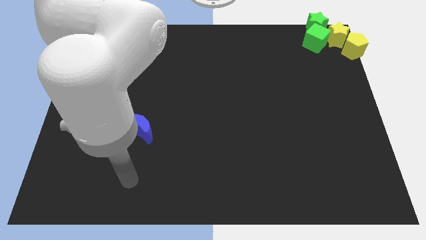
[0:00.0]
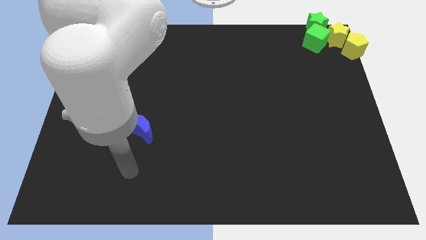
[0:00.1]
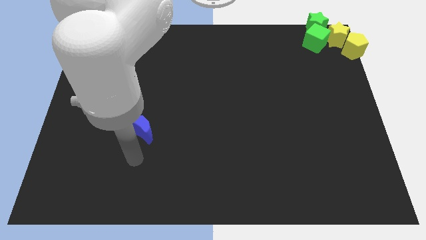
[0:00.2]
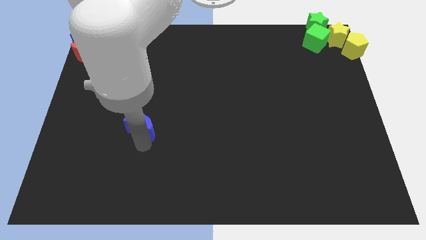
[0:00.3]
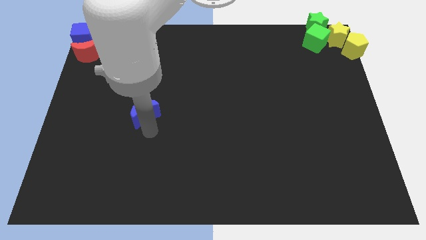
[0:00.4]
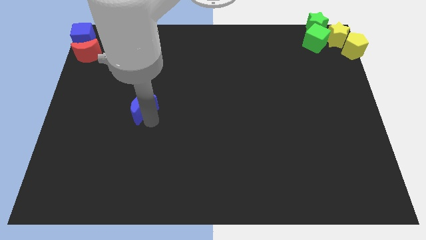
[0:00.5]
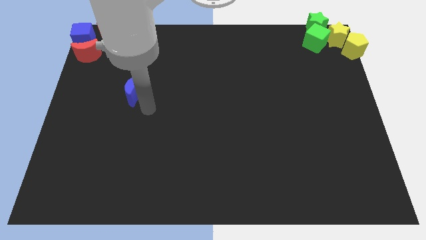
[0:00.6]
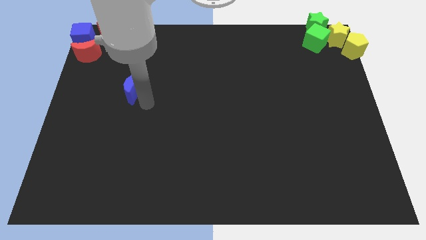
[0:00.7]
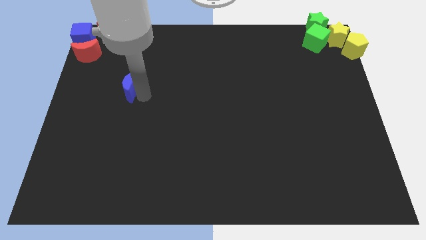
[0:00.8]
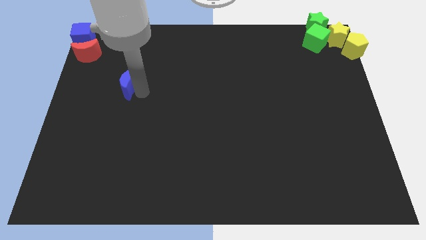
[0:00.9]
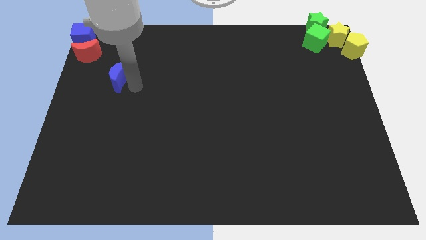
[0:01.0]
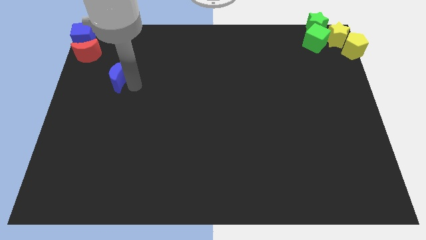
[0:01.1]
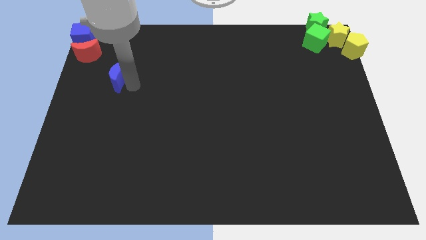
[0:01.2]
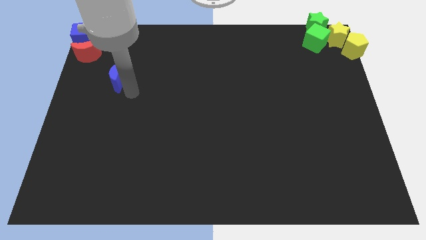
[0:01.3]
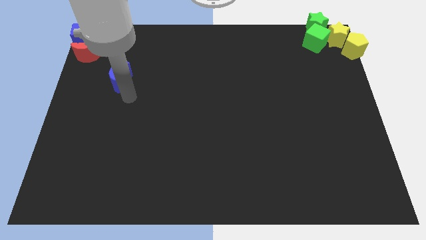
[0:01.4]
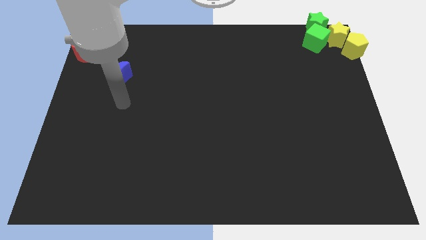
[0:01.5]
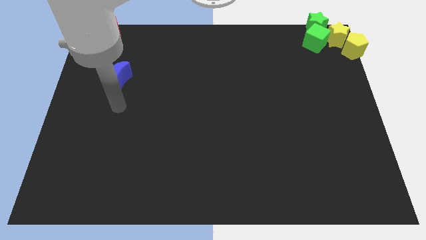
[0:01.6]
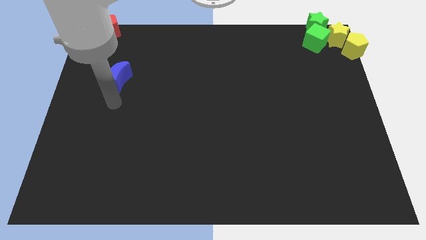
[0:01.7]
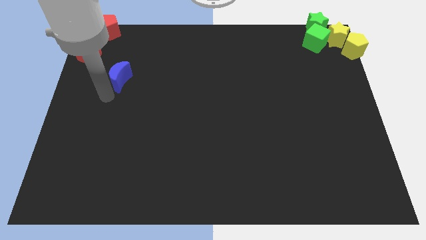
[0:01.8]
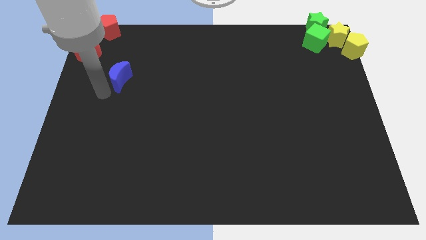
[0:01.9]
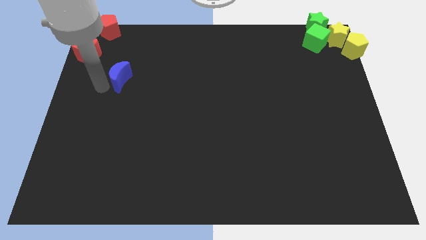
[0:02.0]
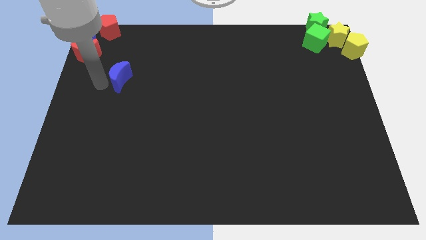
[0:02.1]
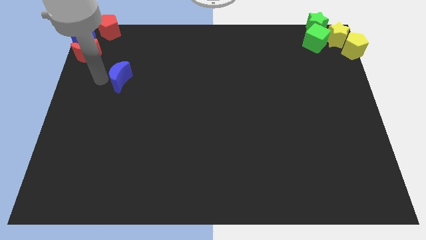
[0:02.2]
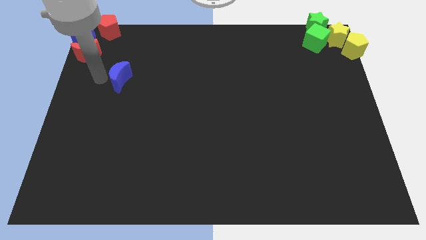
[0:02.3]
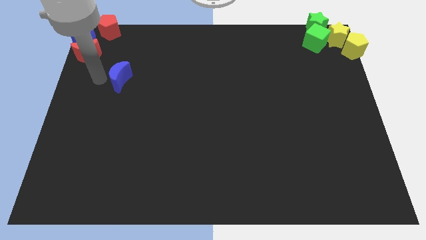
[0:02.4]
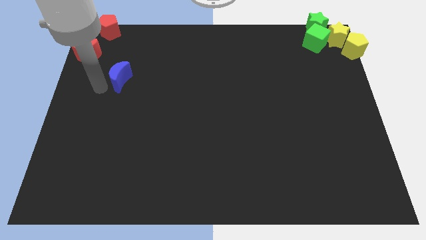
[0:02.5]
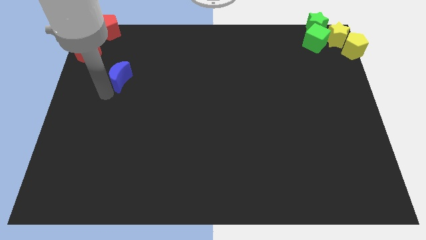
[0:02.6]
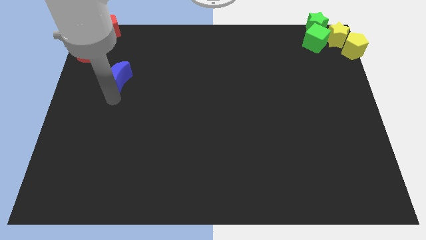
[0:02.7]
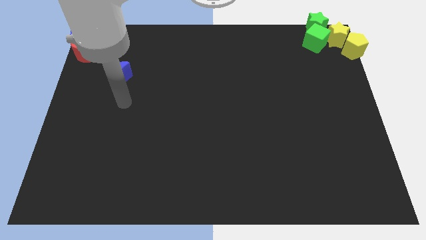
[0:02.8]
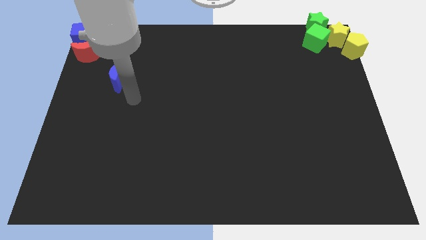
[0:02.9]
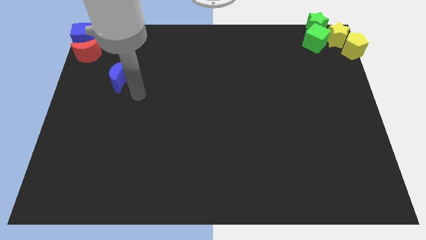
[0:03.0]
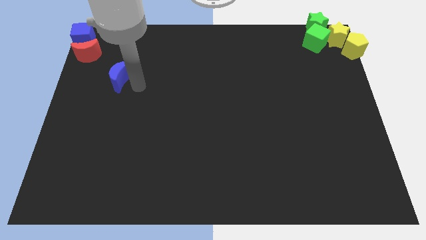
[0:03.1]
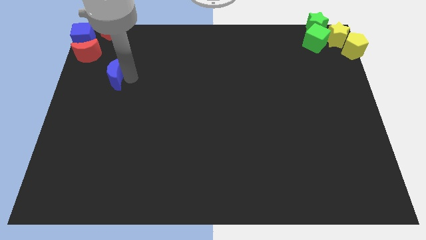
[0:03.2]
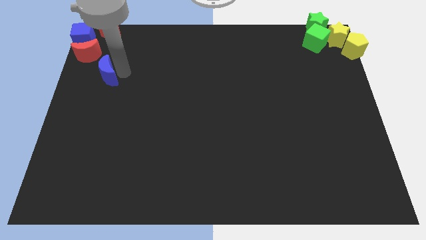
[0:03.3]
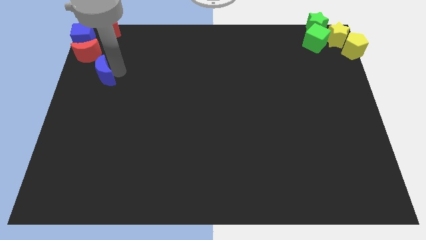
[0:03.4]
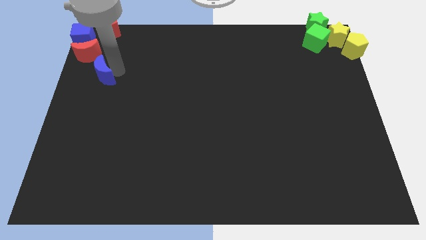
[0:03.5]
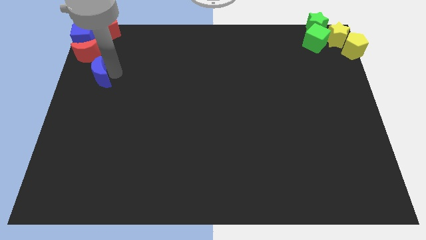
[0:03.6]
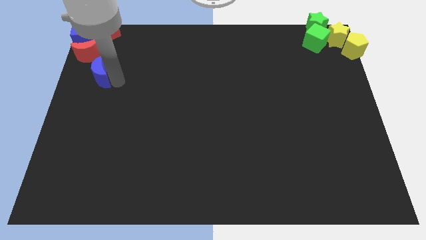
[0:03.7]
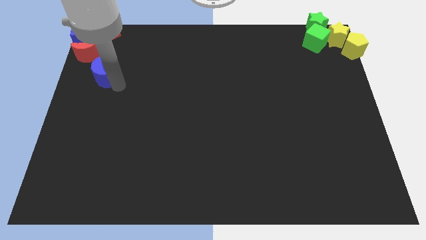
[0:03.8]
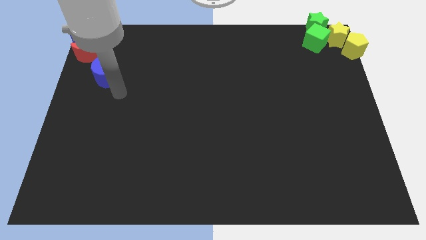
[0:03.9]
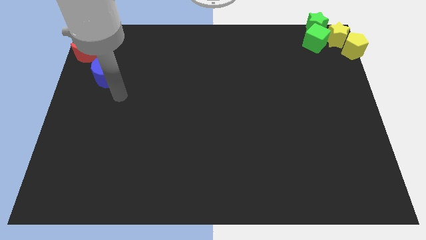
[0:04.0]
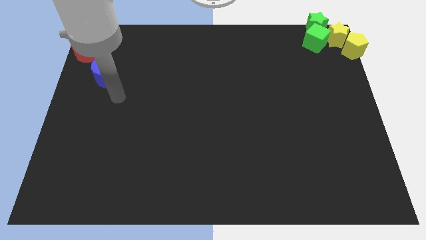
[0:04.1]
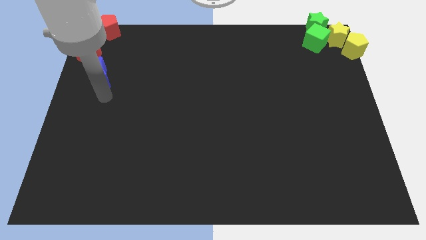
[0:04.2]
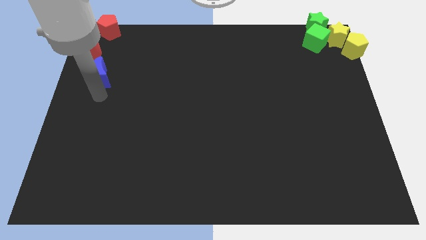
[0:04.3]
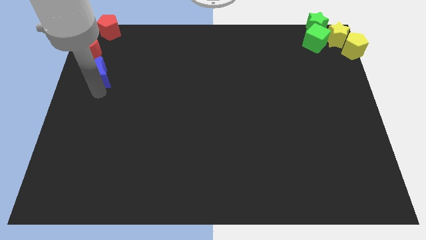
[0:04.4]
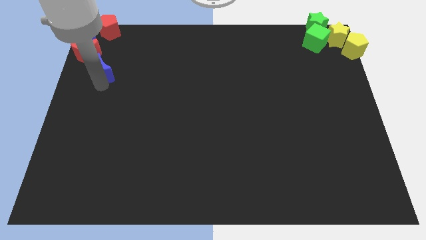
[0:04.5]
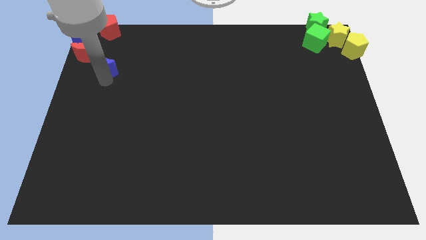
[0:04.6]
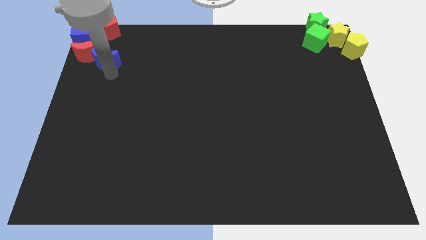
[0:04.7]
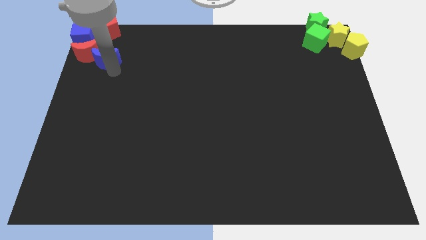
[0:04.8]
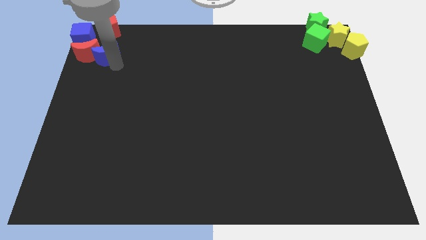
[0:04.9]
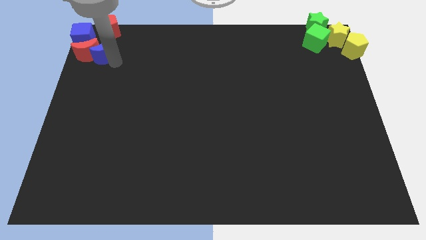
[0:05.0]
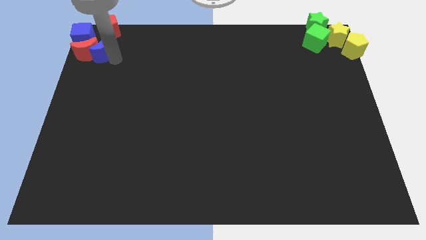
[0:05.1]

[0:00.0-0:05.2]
push the blue crescent into the red crescent

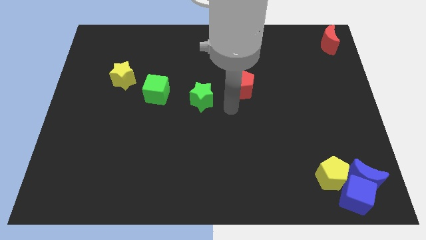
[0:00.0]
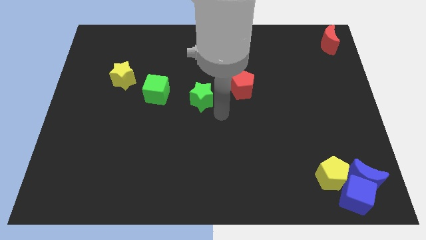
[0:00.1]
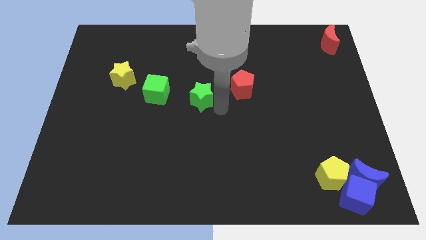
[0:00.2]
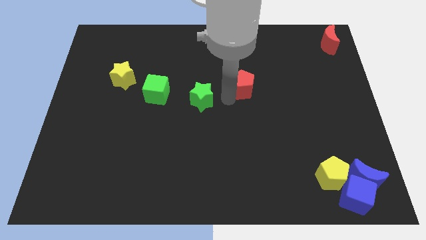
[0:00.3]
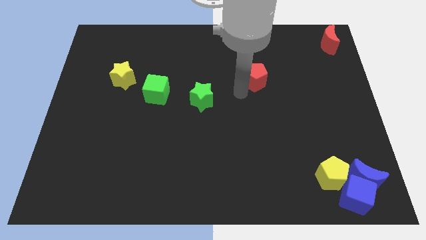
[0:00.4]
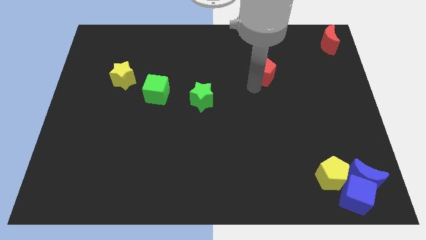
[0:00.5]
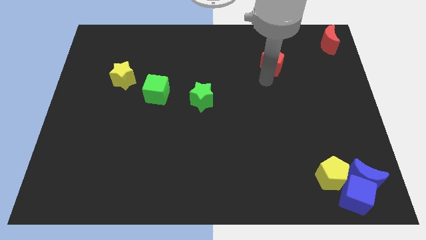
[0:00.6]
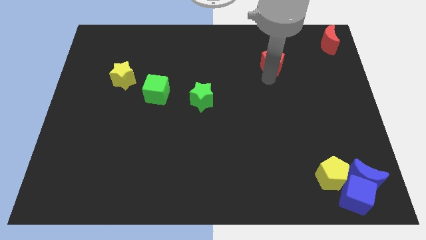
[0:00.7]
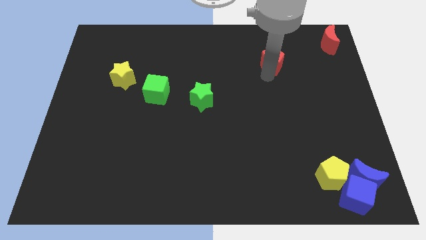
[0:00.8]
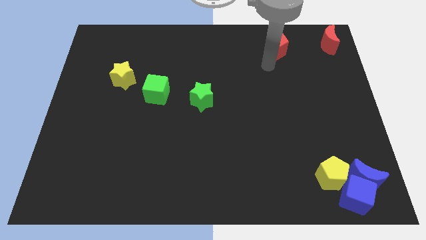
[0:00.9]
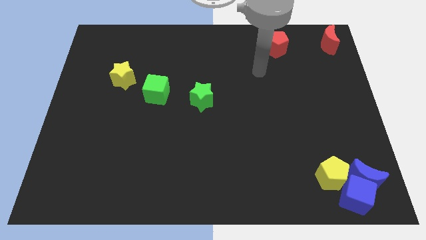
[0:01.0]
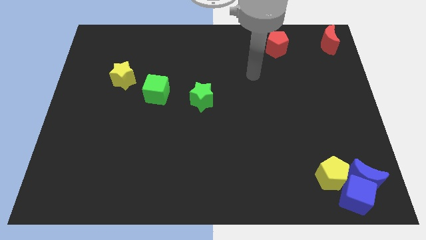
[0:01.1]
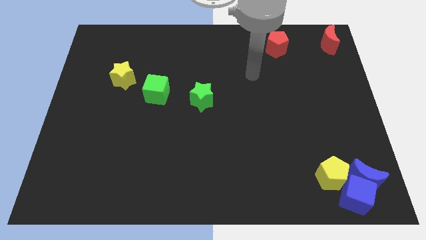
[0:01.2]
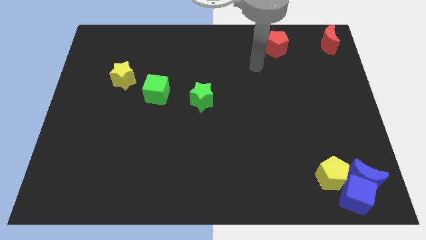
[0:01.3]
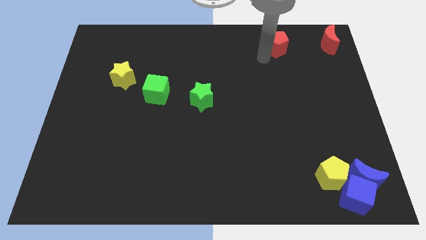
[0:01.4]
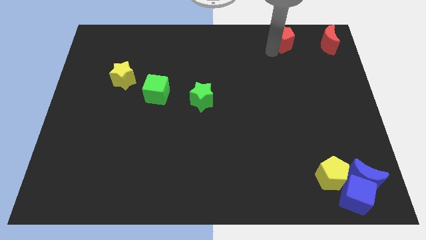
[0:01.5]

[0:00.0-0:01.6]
move the red pentagon horizontally left to the red moon

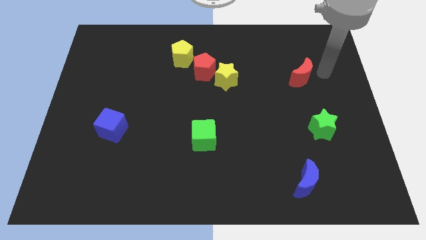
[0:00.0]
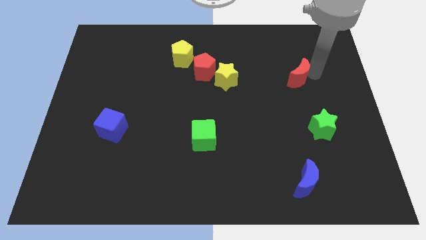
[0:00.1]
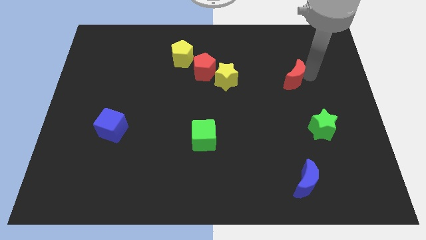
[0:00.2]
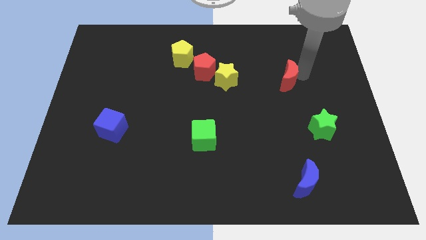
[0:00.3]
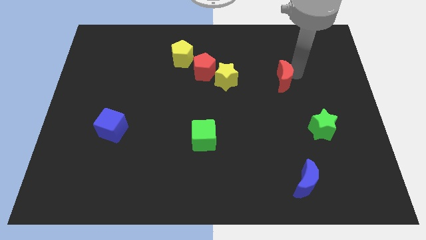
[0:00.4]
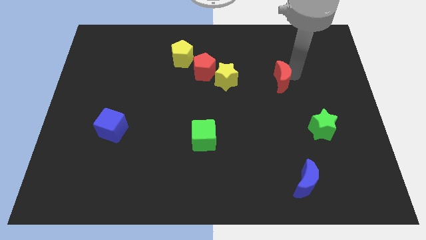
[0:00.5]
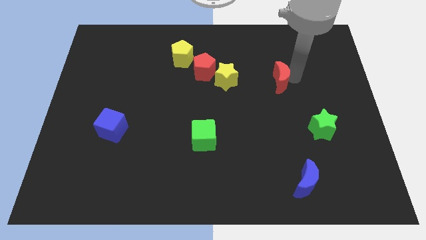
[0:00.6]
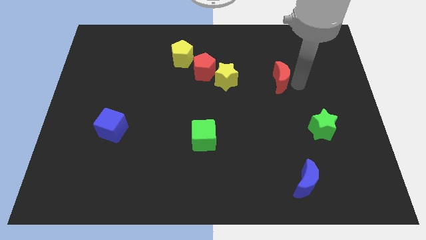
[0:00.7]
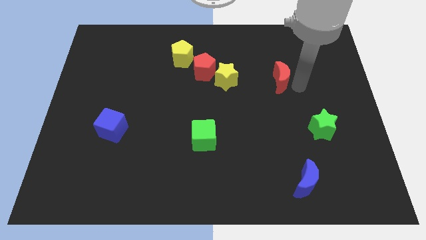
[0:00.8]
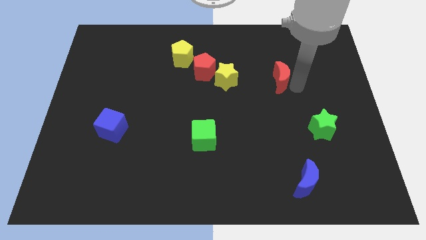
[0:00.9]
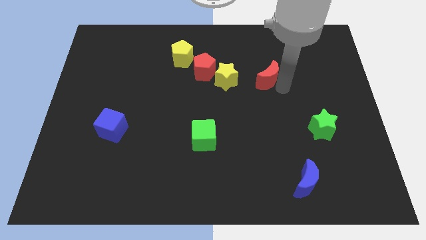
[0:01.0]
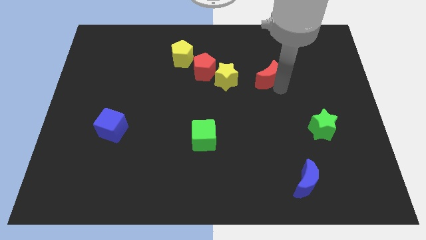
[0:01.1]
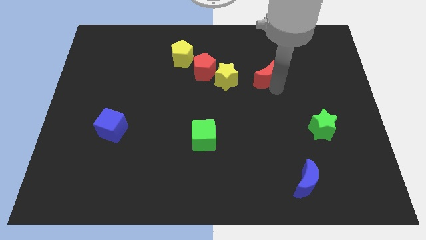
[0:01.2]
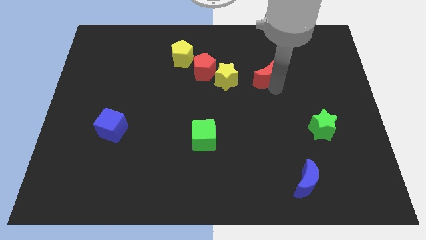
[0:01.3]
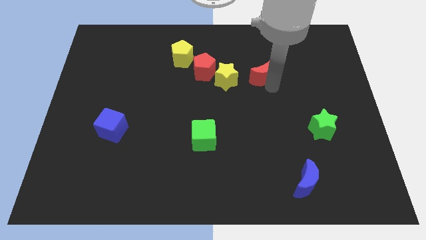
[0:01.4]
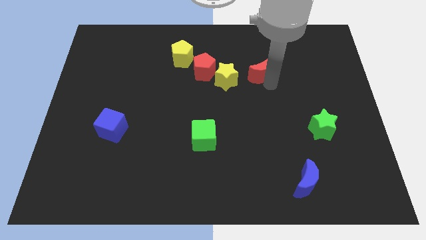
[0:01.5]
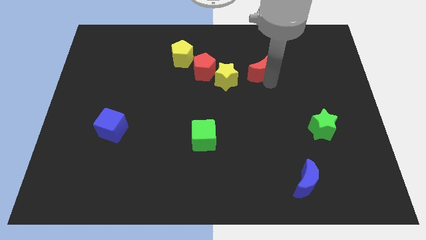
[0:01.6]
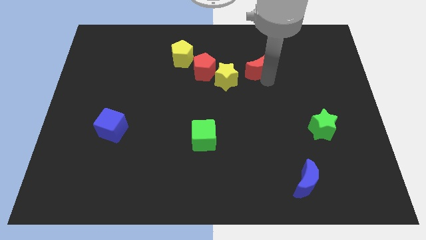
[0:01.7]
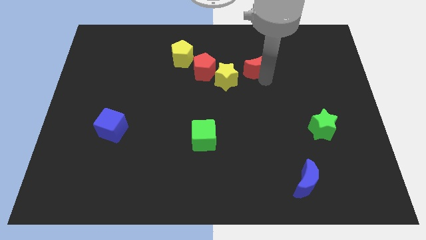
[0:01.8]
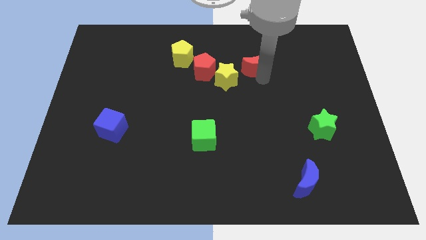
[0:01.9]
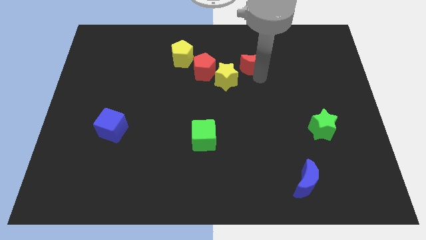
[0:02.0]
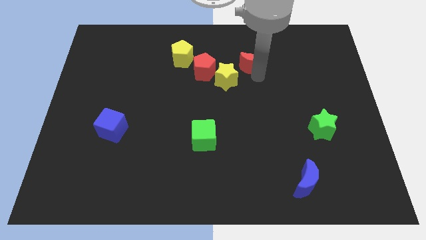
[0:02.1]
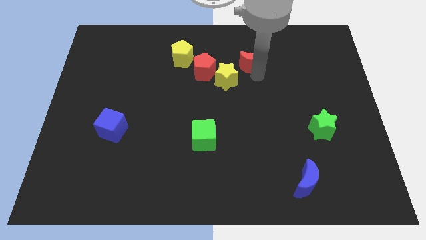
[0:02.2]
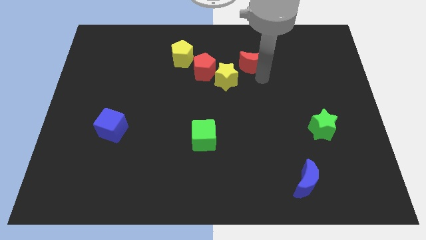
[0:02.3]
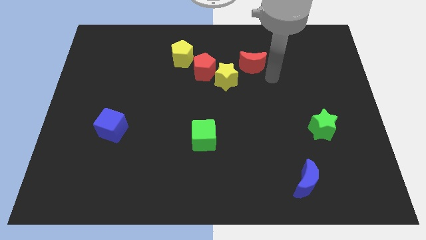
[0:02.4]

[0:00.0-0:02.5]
place the red crescent at the right side of the red pentagon
